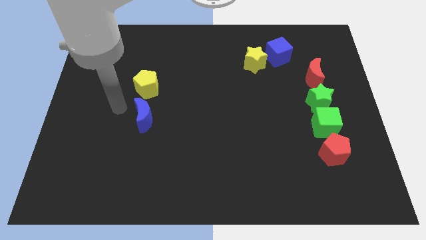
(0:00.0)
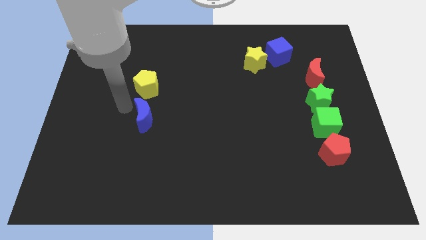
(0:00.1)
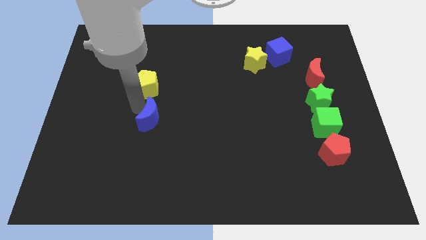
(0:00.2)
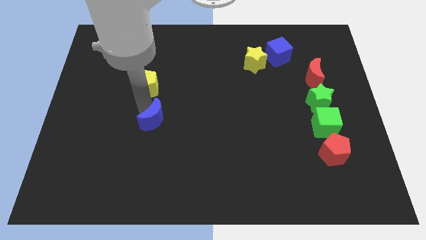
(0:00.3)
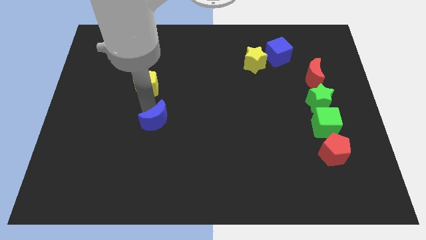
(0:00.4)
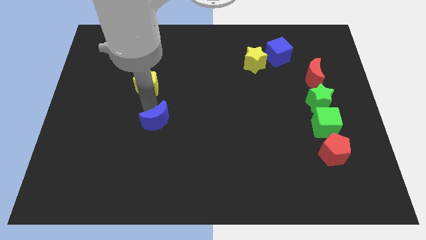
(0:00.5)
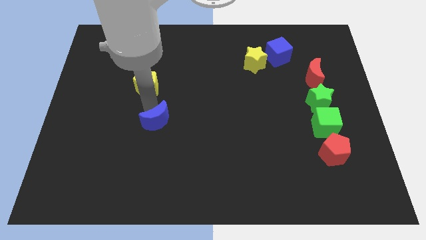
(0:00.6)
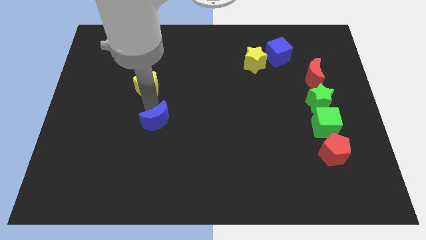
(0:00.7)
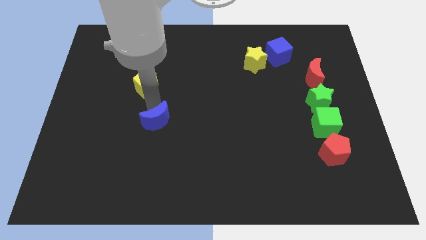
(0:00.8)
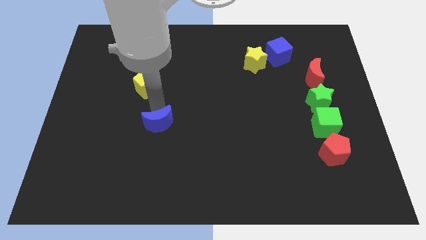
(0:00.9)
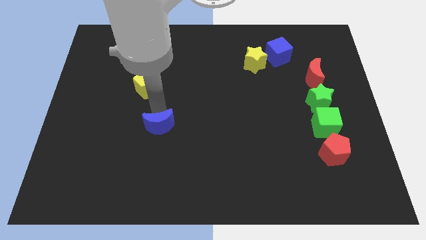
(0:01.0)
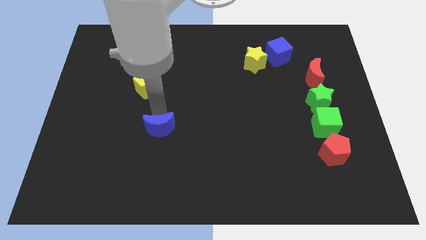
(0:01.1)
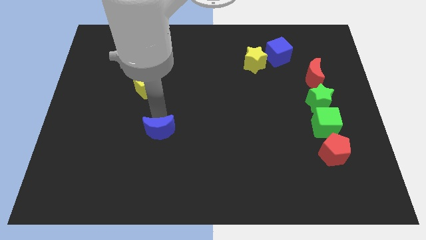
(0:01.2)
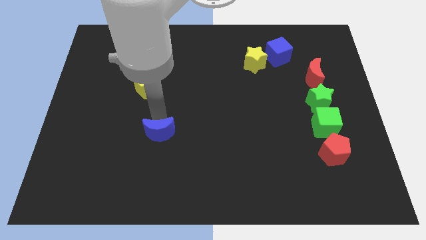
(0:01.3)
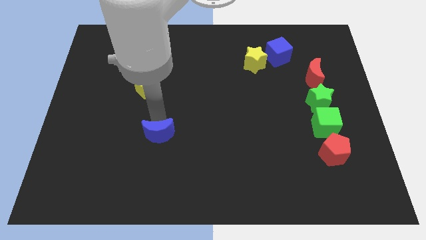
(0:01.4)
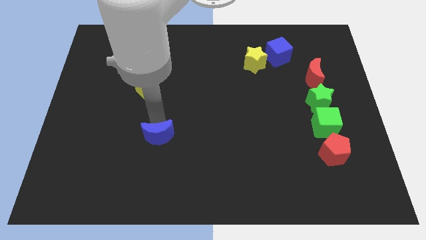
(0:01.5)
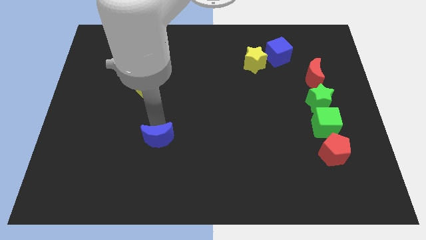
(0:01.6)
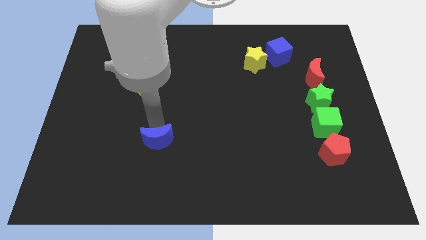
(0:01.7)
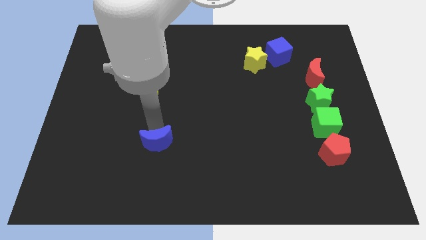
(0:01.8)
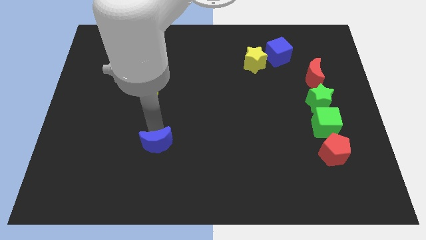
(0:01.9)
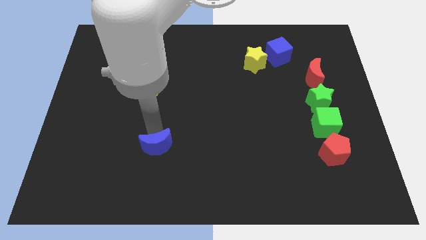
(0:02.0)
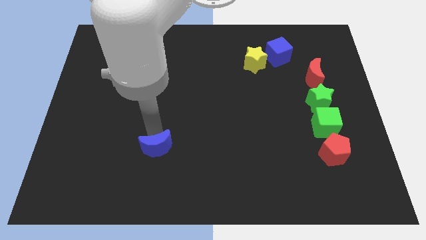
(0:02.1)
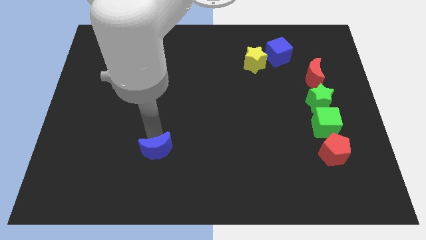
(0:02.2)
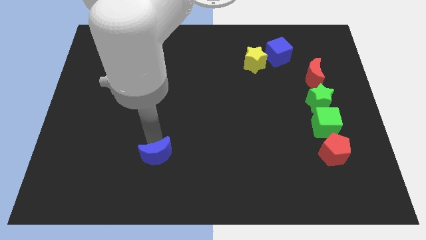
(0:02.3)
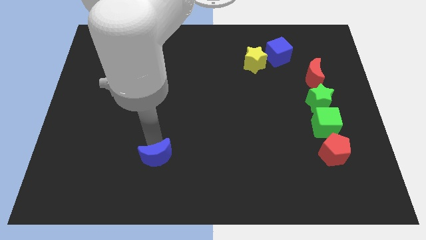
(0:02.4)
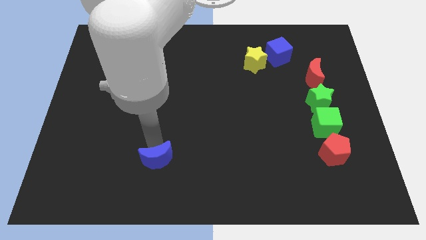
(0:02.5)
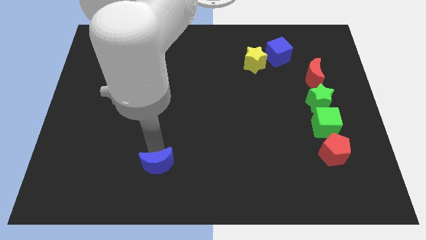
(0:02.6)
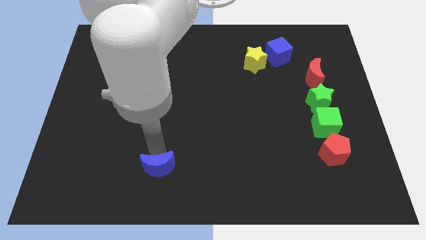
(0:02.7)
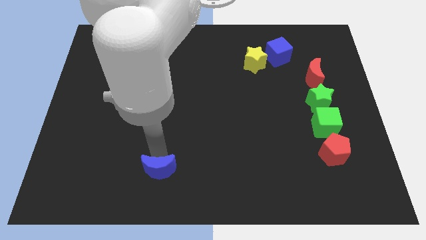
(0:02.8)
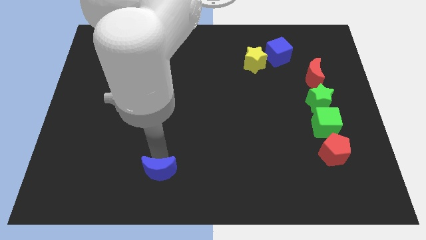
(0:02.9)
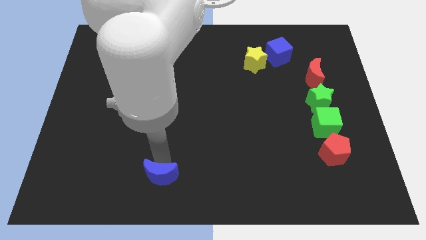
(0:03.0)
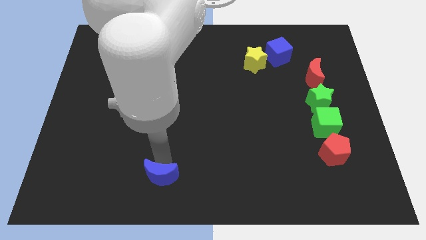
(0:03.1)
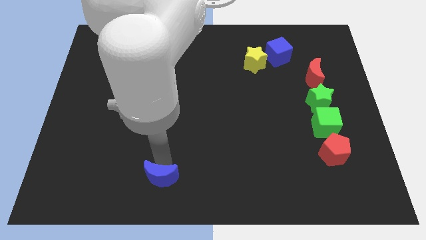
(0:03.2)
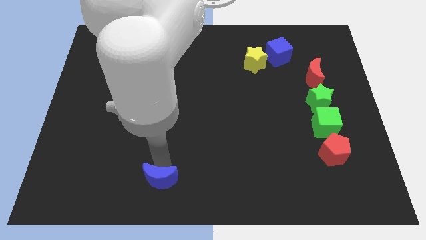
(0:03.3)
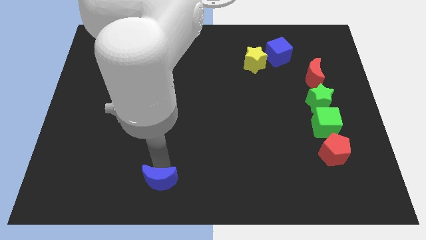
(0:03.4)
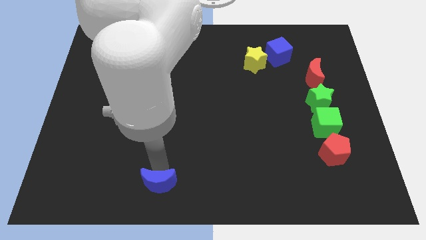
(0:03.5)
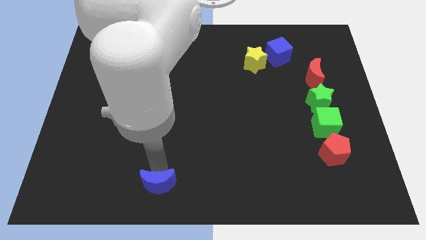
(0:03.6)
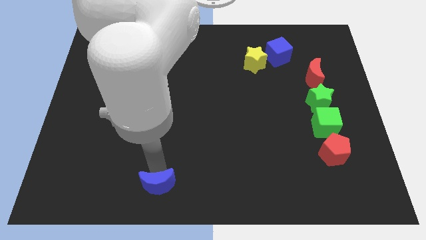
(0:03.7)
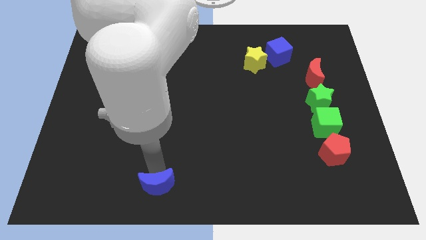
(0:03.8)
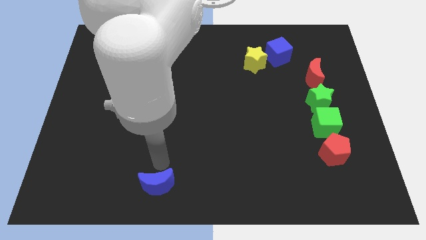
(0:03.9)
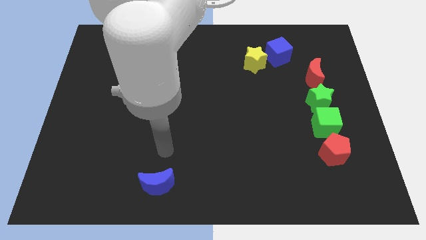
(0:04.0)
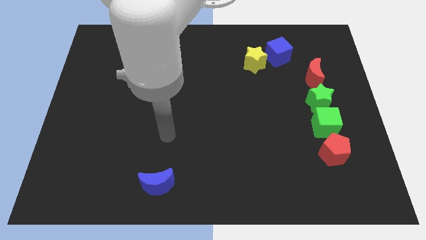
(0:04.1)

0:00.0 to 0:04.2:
push the blue crescent towards the bottom side of board

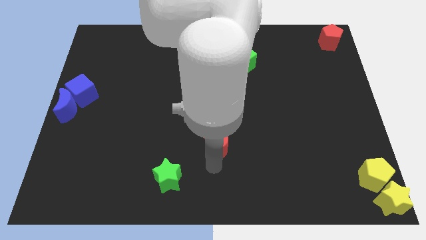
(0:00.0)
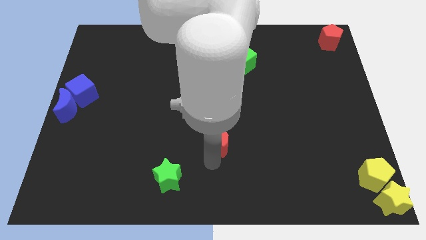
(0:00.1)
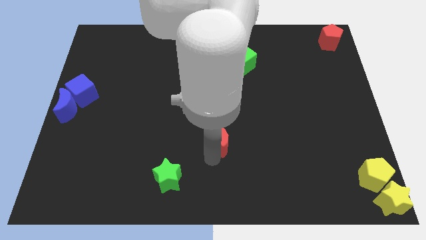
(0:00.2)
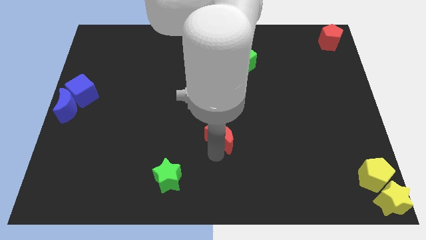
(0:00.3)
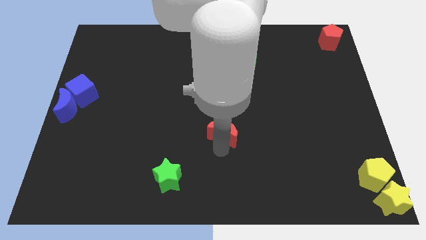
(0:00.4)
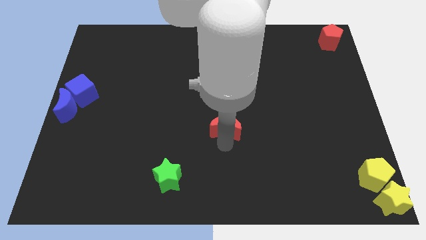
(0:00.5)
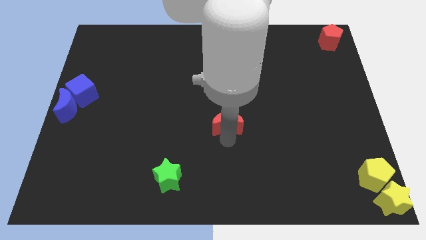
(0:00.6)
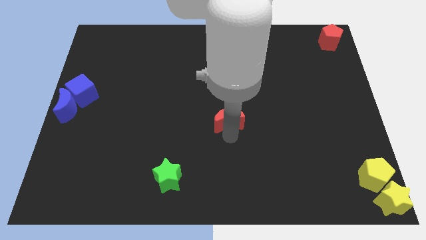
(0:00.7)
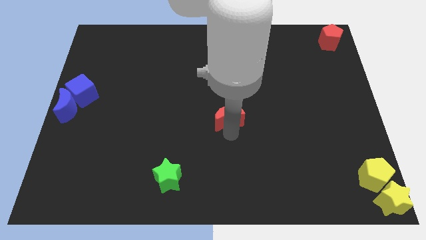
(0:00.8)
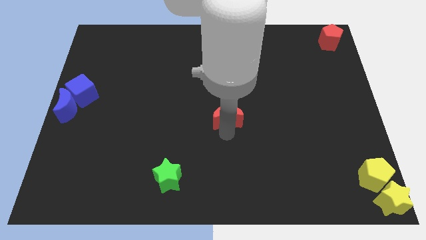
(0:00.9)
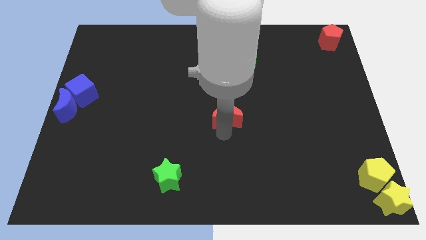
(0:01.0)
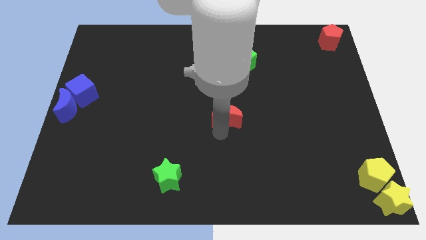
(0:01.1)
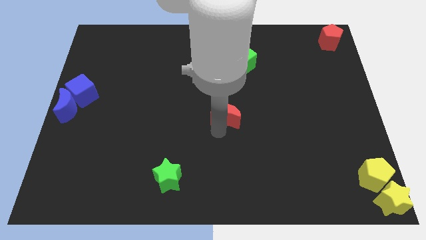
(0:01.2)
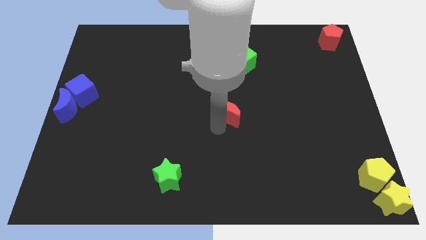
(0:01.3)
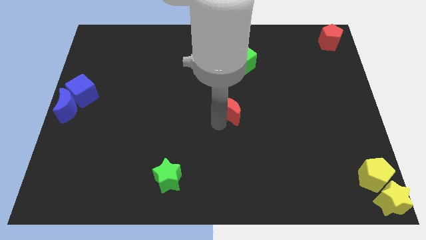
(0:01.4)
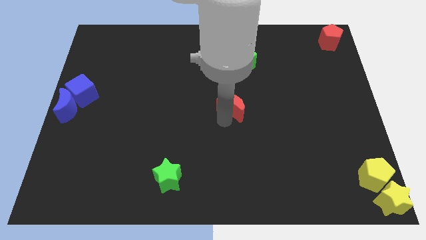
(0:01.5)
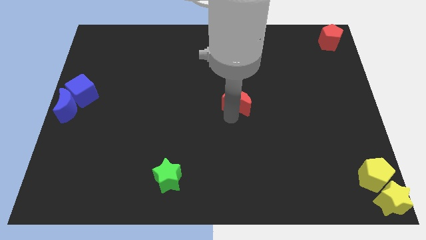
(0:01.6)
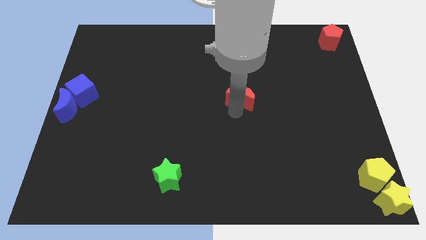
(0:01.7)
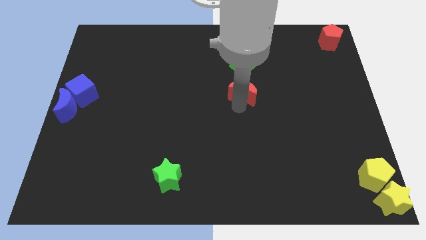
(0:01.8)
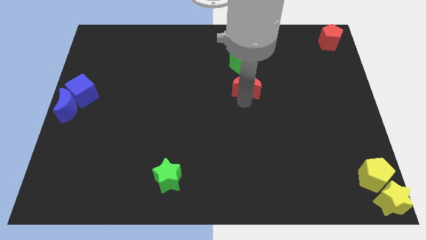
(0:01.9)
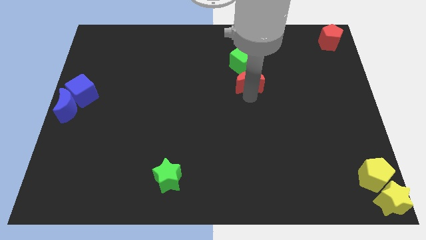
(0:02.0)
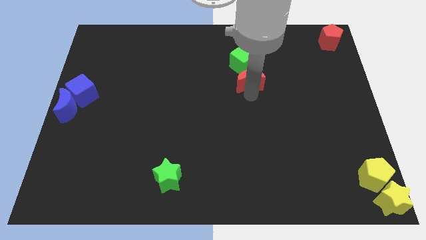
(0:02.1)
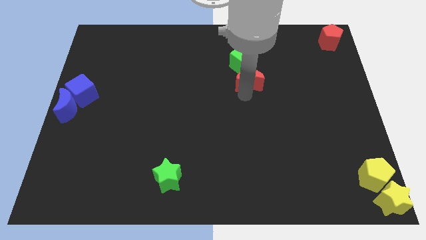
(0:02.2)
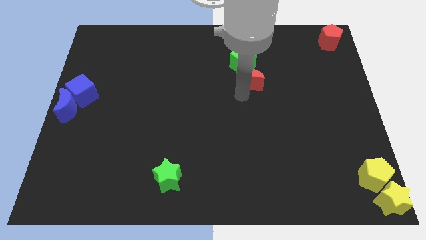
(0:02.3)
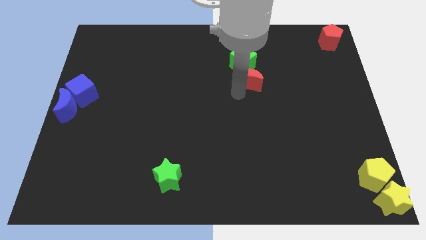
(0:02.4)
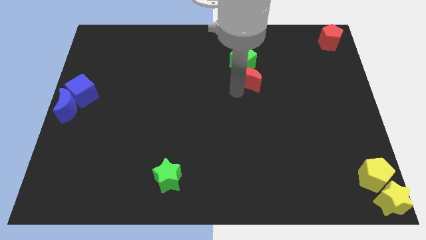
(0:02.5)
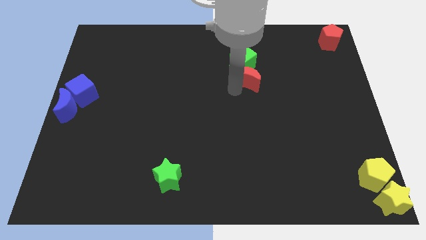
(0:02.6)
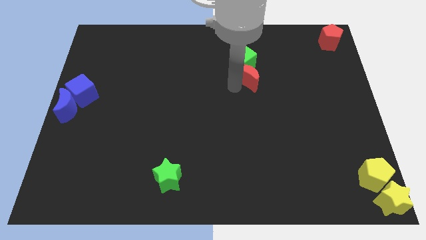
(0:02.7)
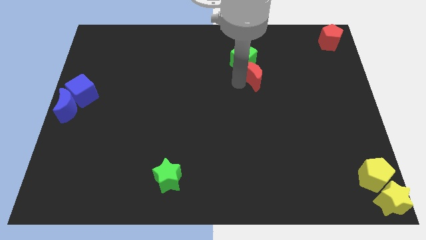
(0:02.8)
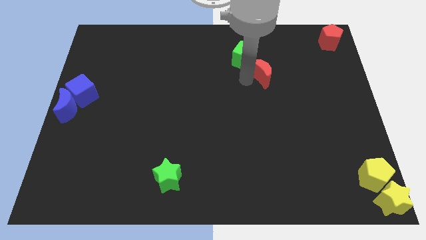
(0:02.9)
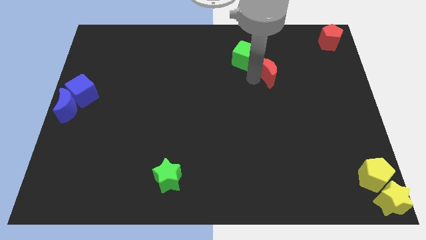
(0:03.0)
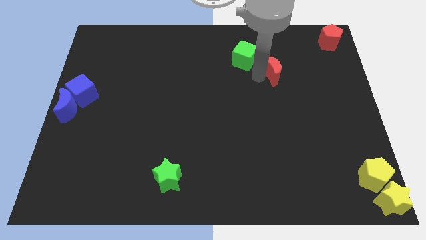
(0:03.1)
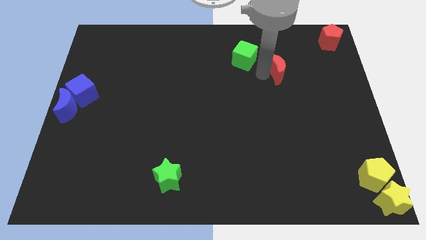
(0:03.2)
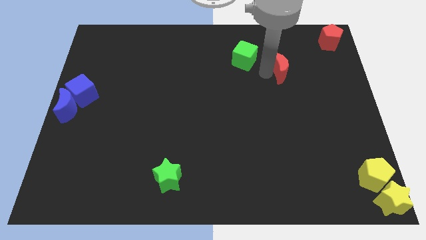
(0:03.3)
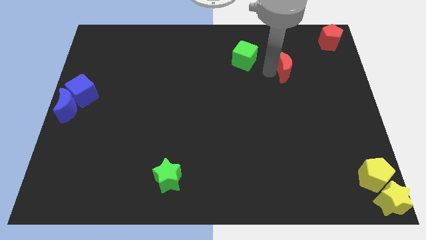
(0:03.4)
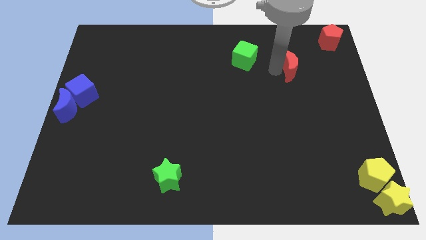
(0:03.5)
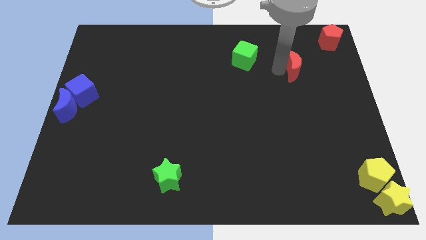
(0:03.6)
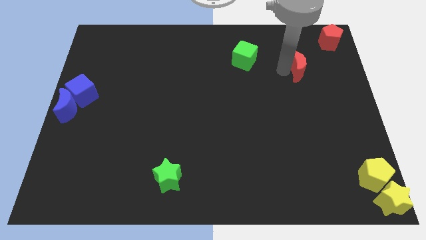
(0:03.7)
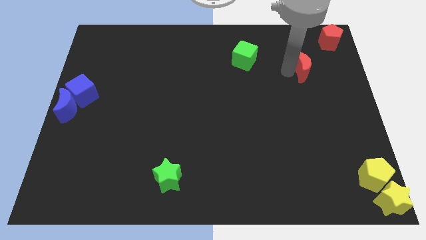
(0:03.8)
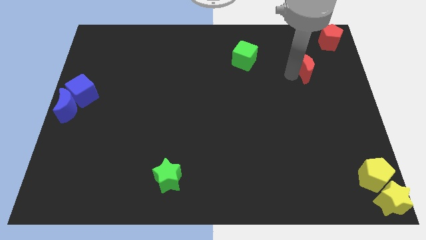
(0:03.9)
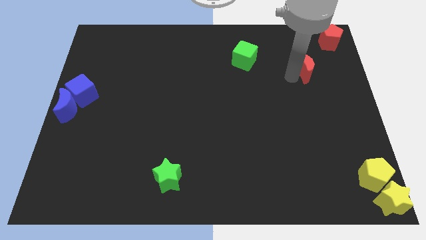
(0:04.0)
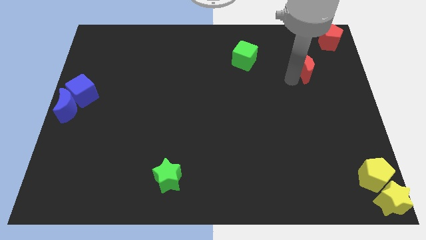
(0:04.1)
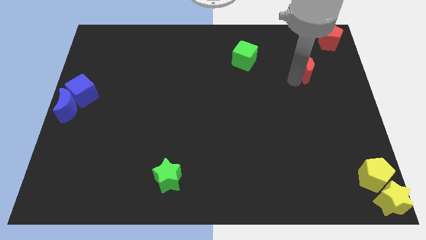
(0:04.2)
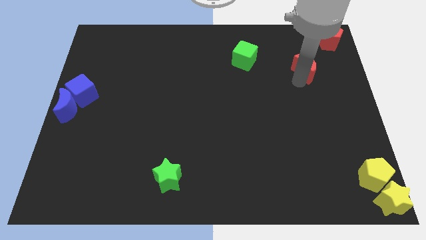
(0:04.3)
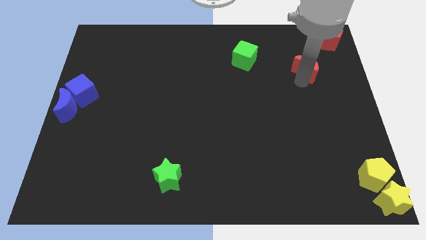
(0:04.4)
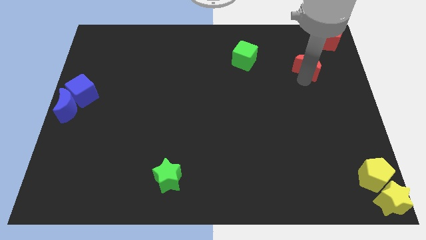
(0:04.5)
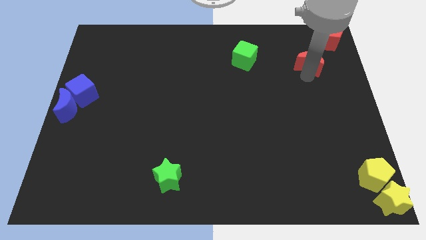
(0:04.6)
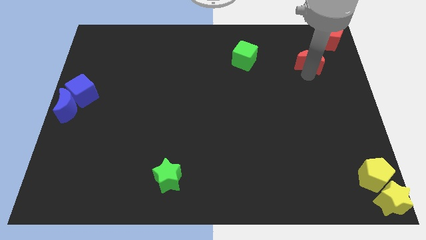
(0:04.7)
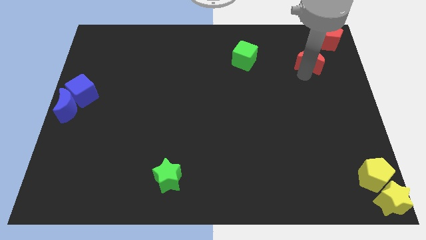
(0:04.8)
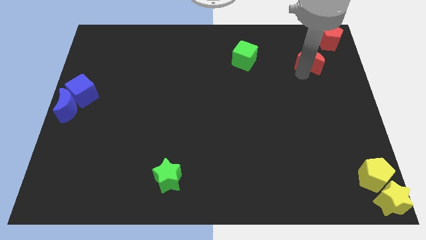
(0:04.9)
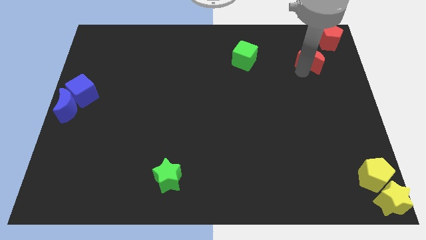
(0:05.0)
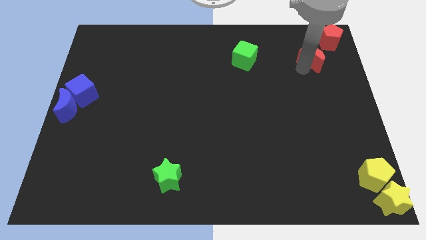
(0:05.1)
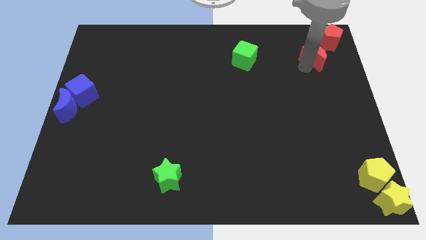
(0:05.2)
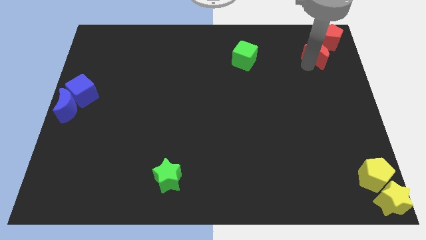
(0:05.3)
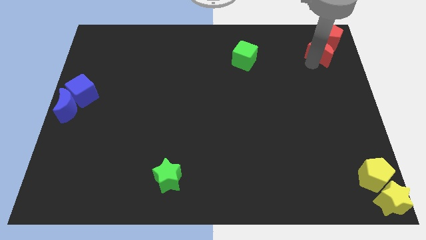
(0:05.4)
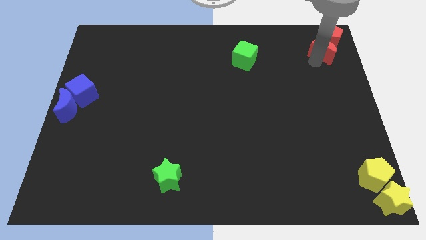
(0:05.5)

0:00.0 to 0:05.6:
push the red moon towards the red pentagon
